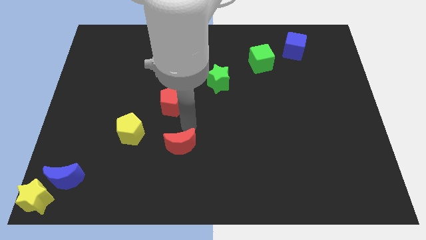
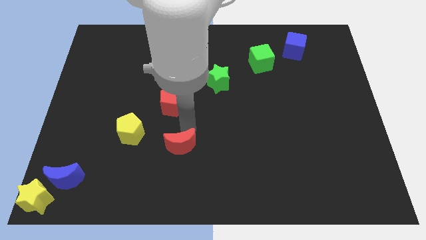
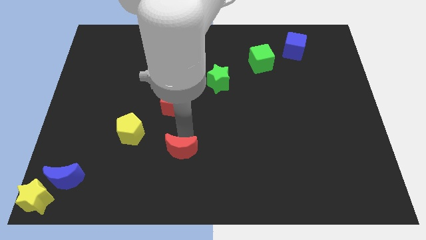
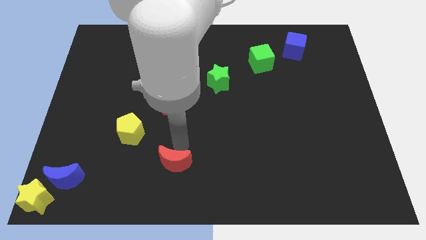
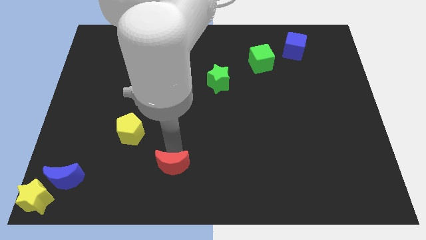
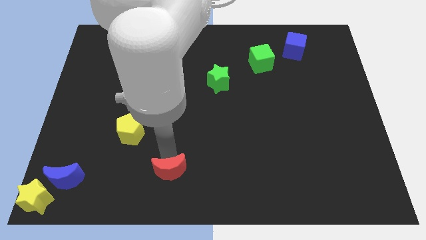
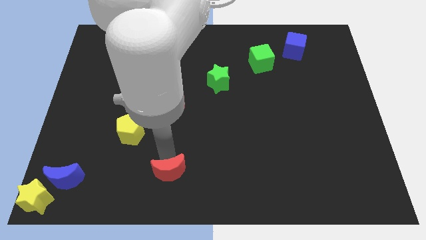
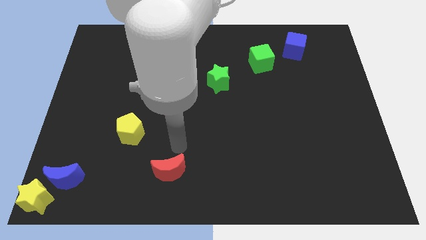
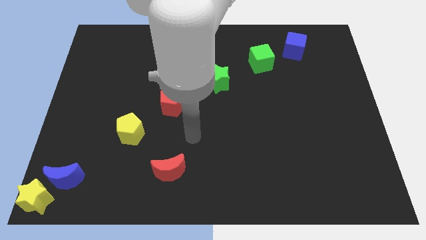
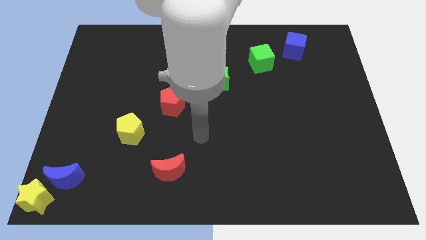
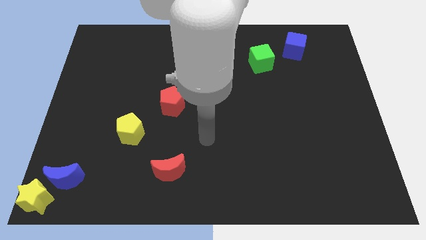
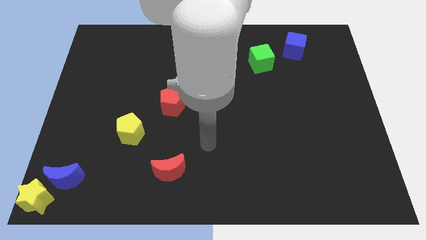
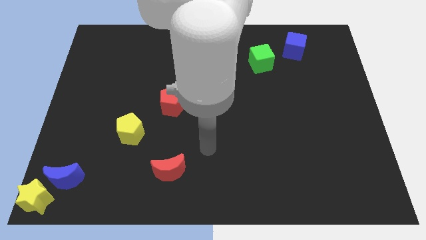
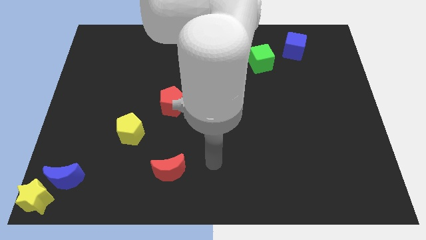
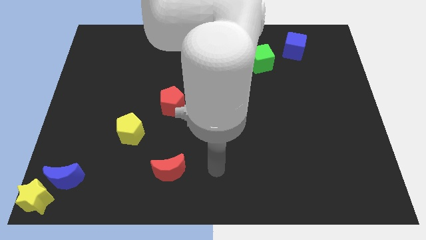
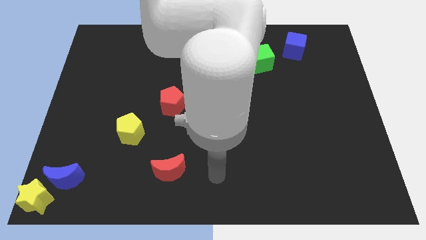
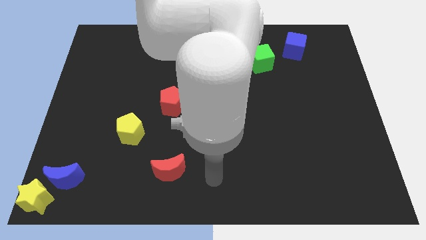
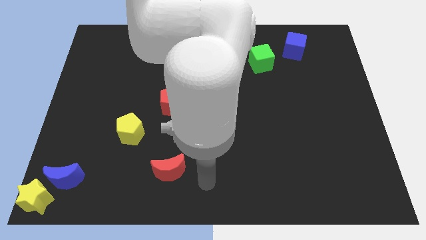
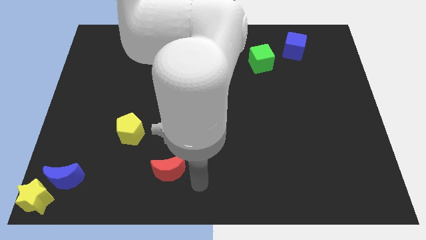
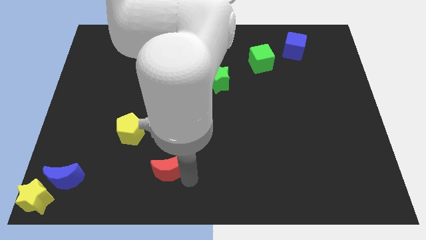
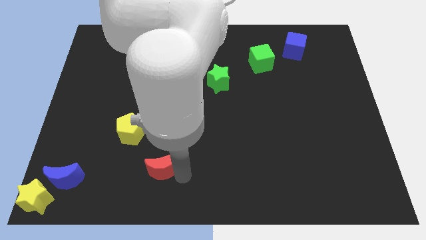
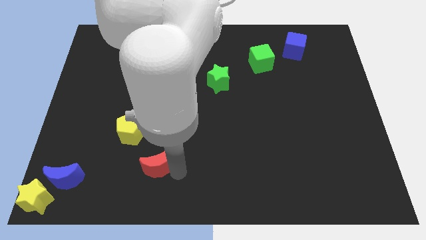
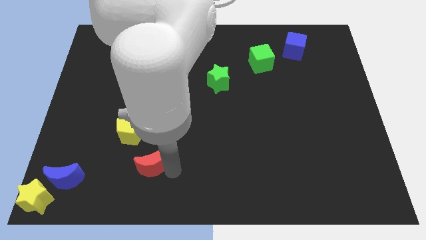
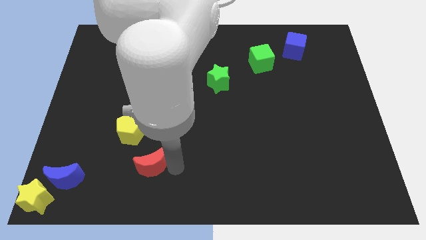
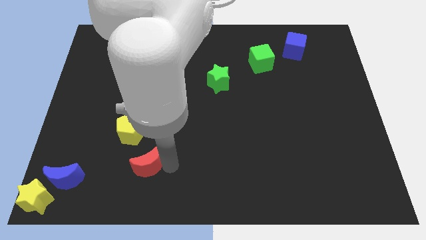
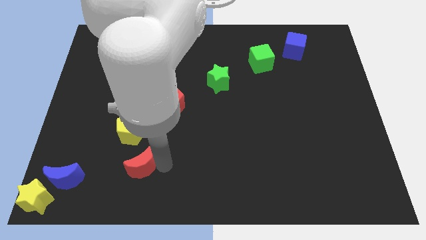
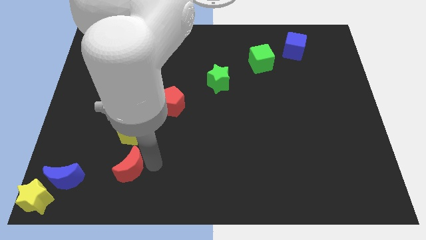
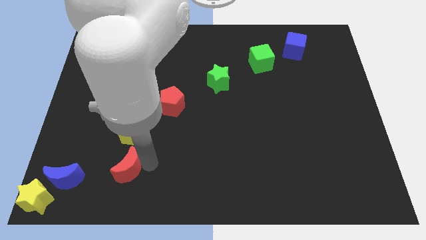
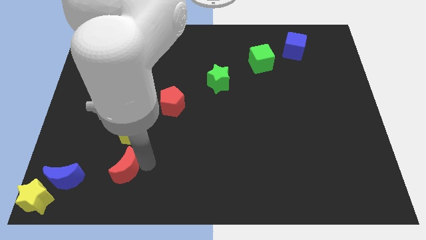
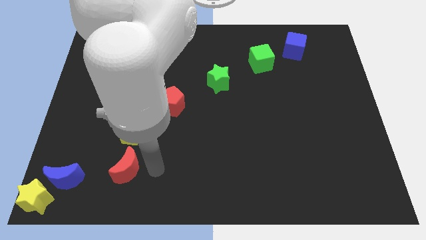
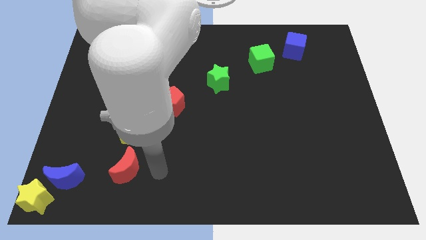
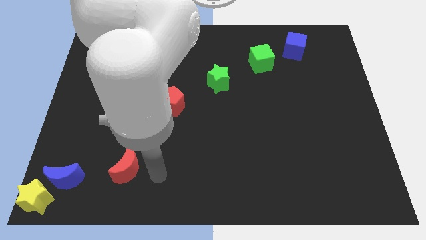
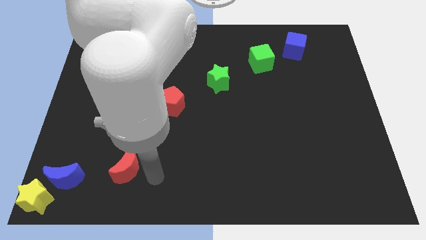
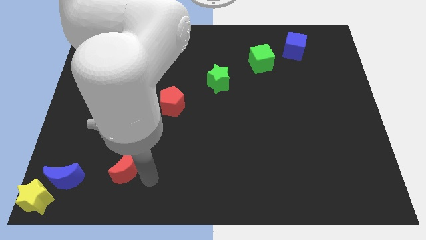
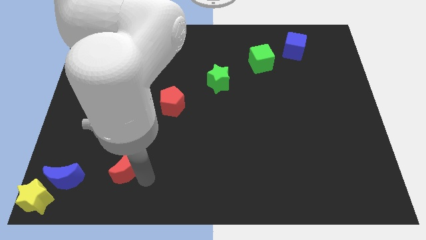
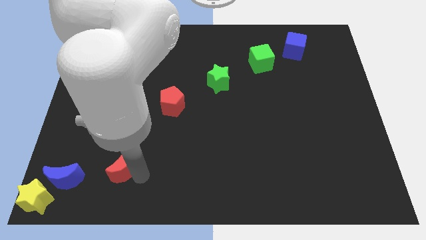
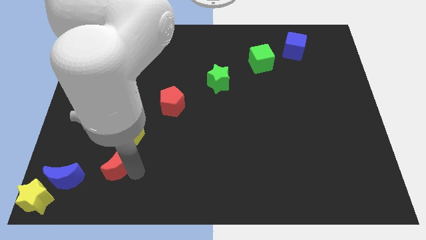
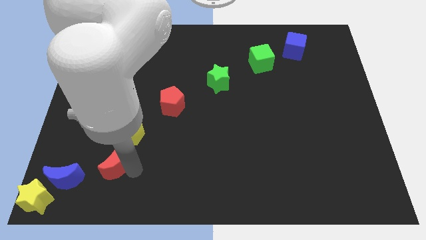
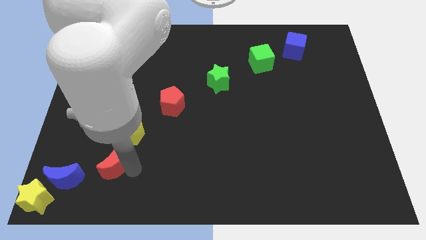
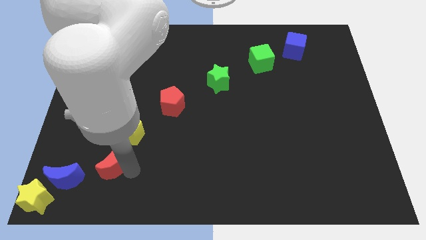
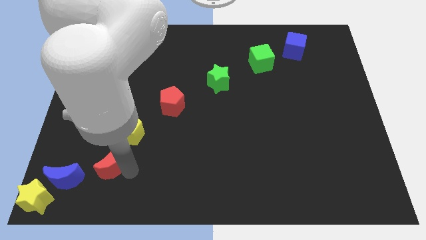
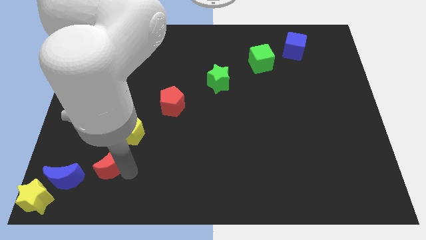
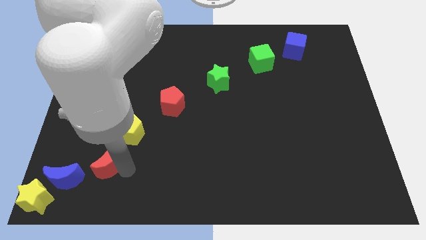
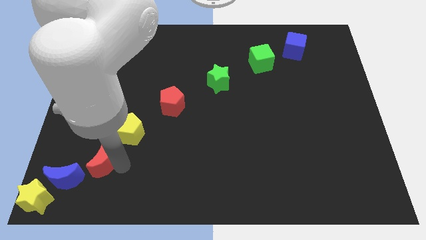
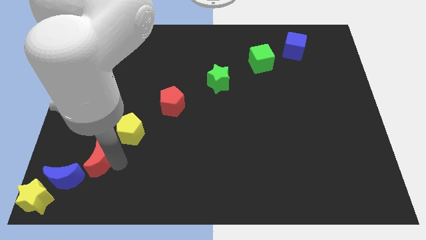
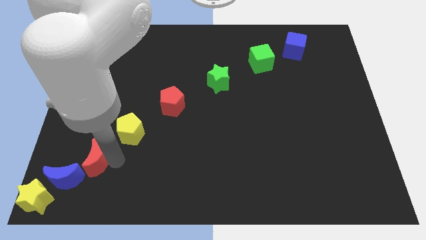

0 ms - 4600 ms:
place the red crescent to the right of the blue crescent

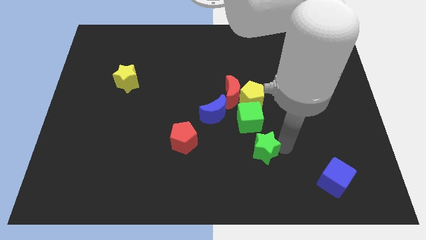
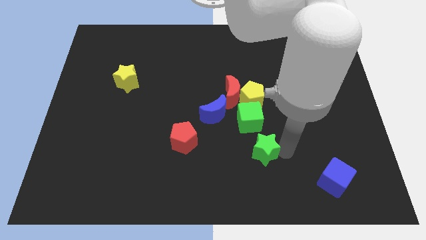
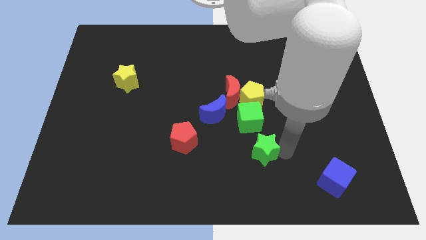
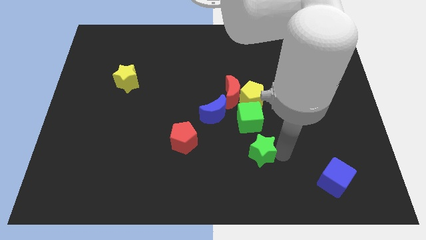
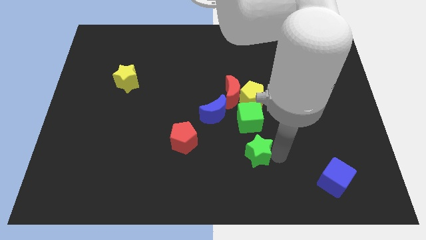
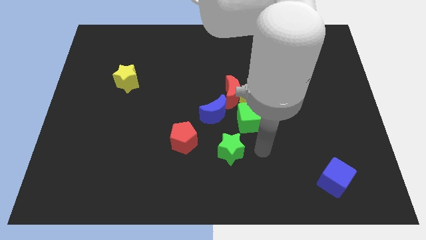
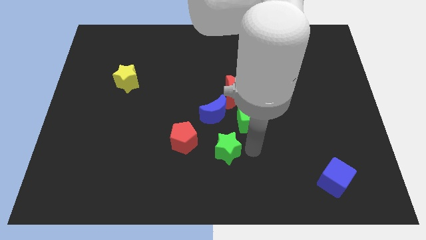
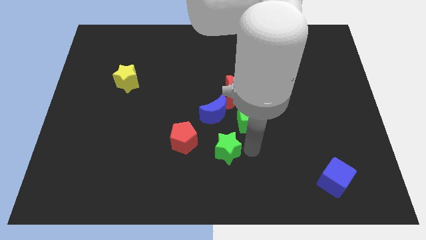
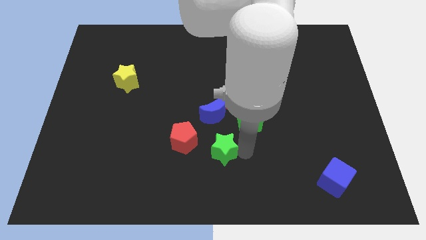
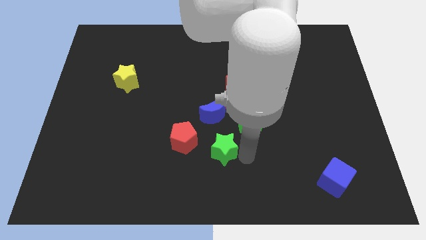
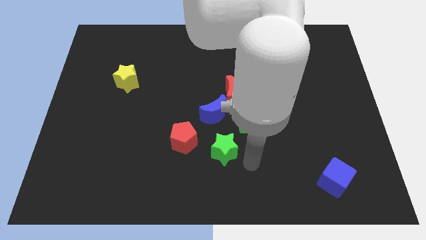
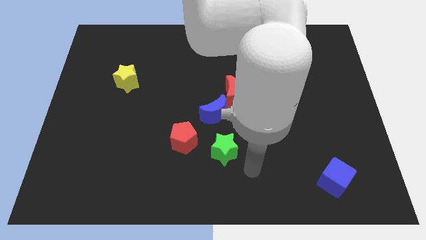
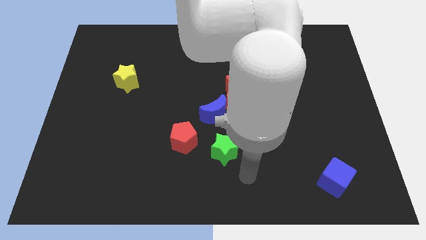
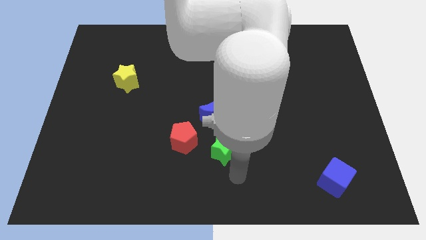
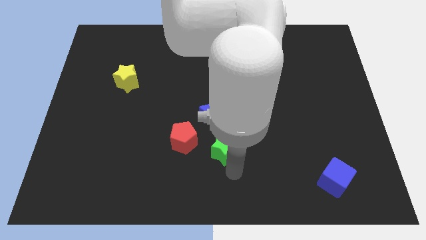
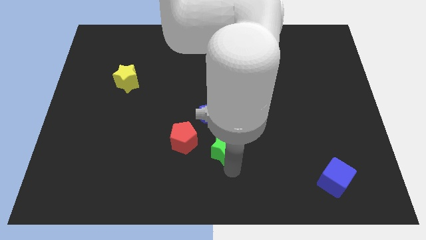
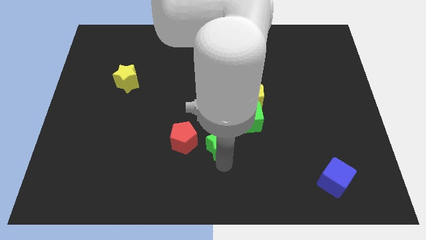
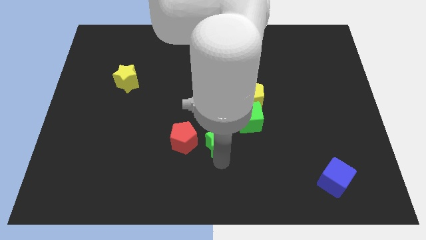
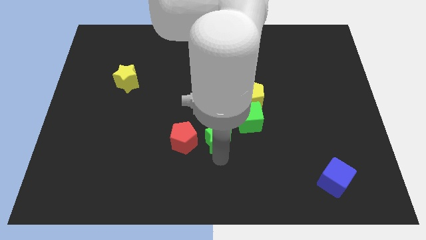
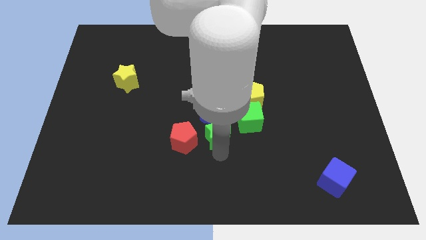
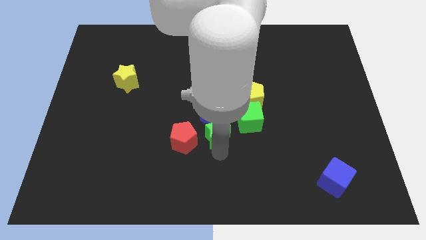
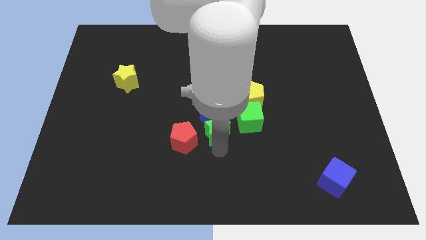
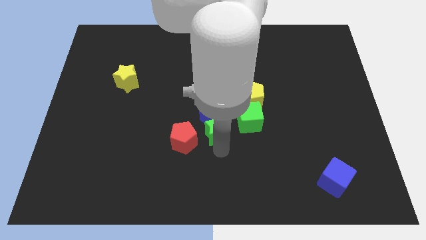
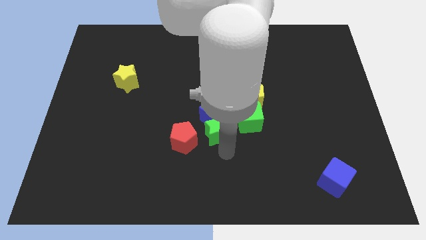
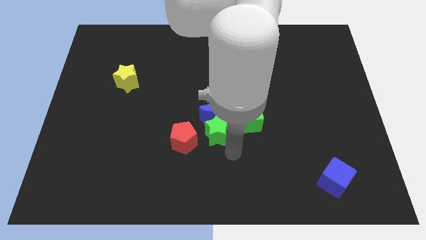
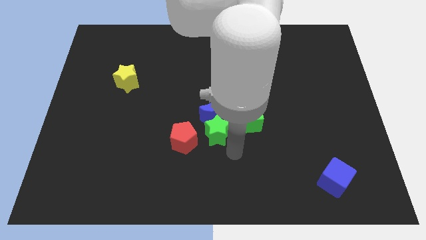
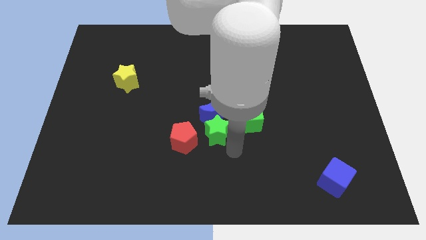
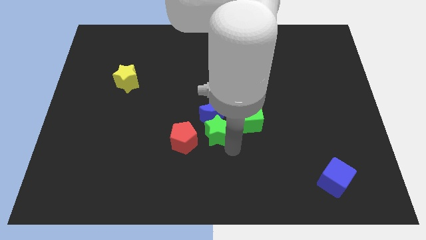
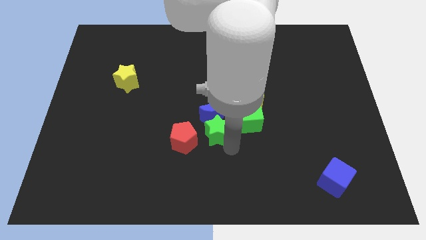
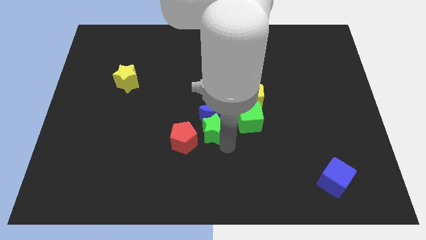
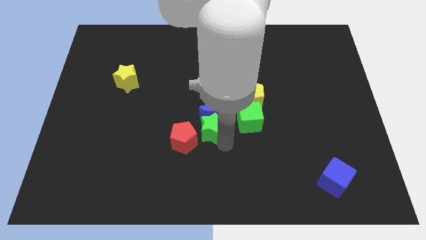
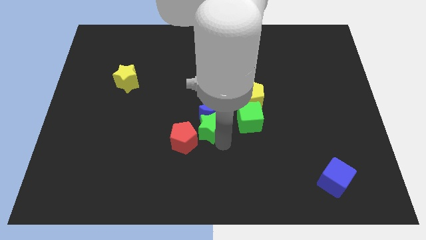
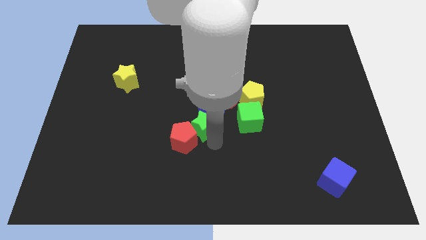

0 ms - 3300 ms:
place the green star to the bottom of blue crescent

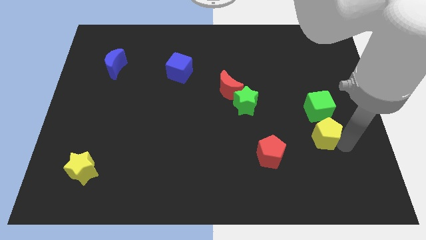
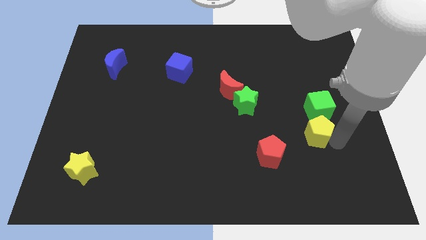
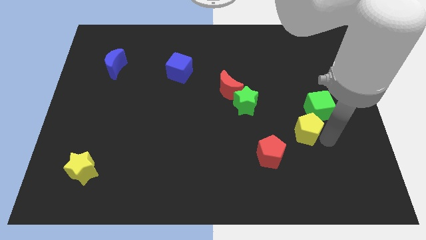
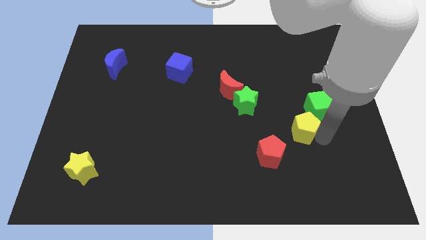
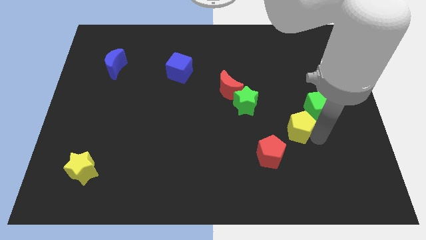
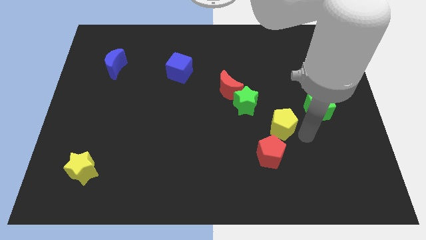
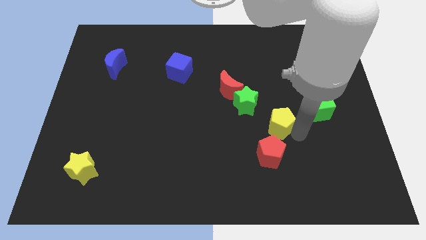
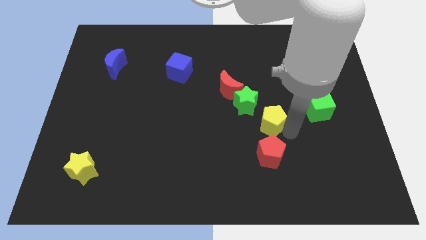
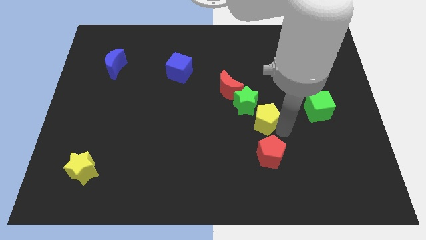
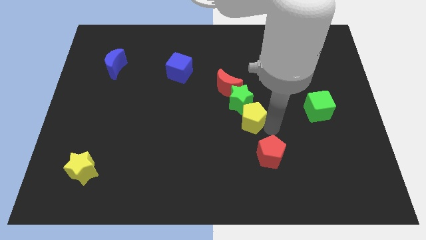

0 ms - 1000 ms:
push the yellow pentagon into the green star
